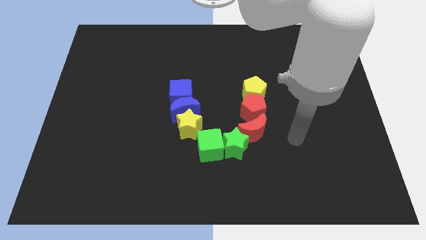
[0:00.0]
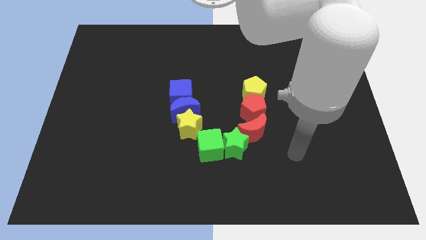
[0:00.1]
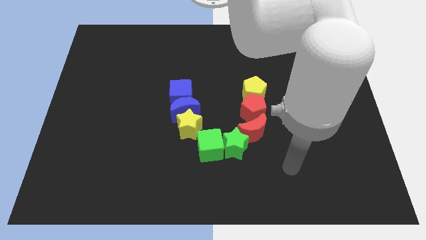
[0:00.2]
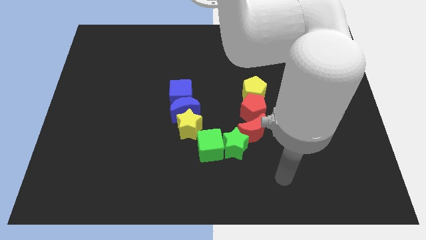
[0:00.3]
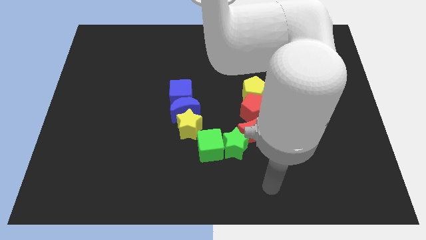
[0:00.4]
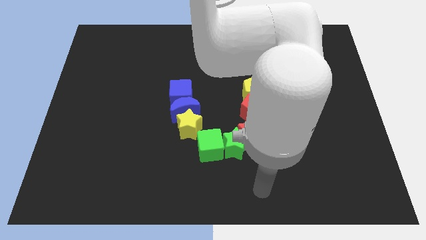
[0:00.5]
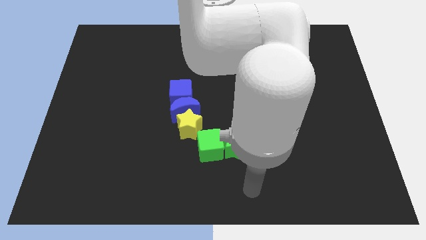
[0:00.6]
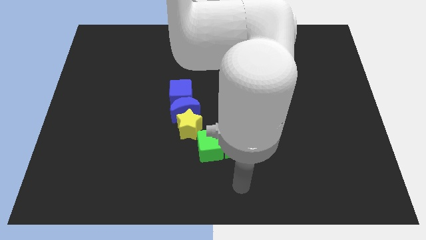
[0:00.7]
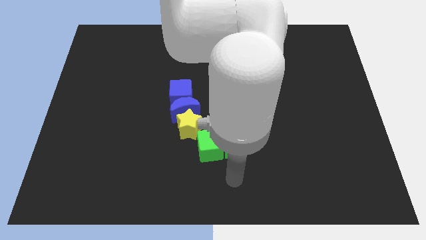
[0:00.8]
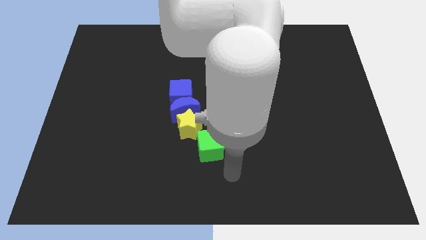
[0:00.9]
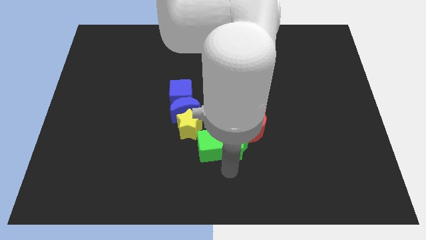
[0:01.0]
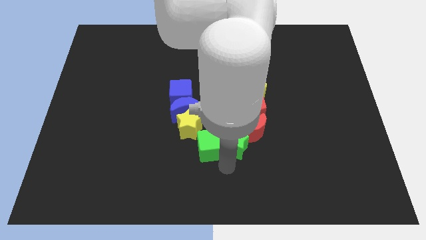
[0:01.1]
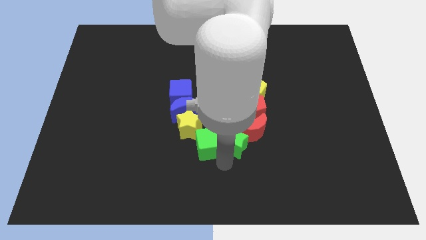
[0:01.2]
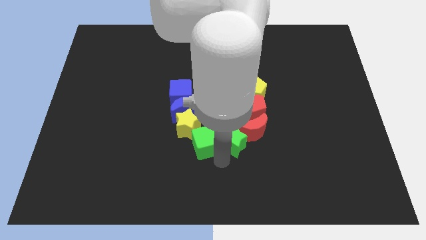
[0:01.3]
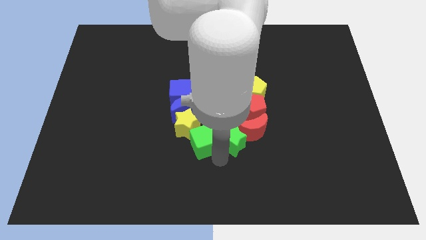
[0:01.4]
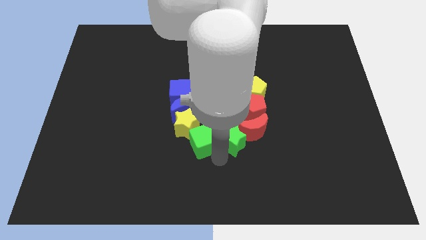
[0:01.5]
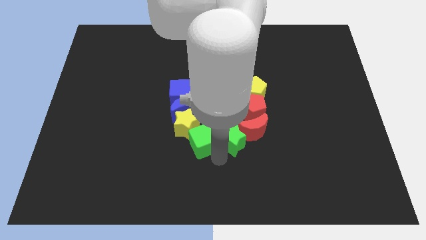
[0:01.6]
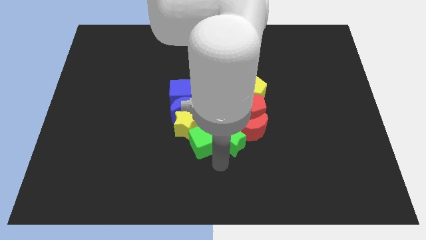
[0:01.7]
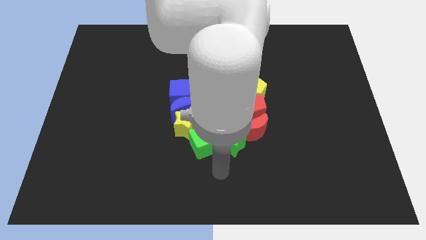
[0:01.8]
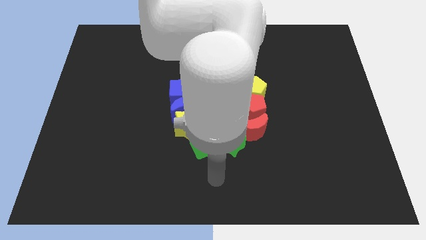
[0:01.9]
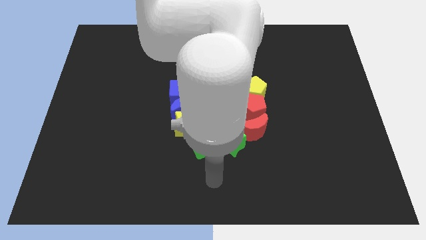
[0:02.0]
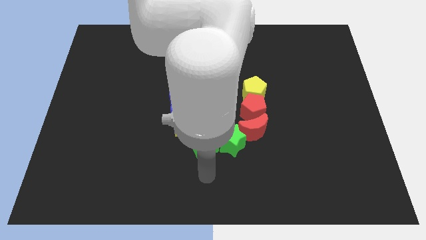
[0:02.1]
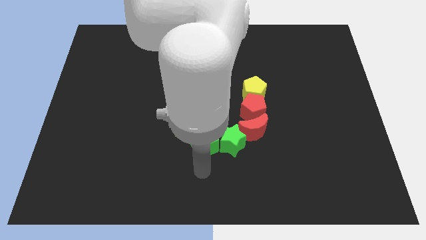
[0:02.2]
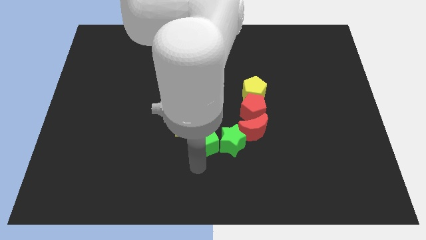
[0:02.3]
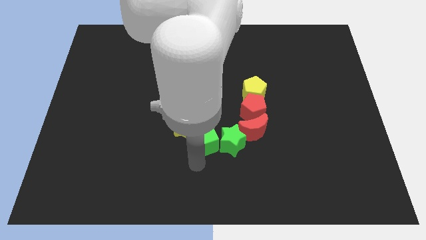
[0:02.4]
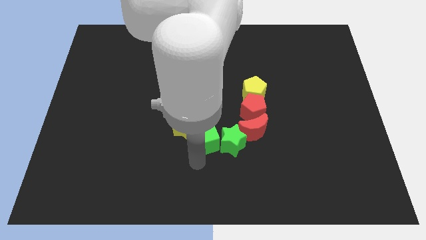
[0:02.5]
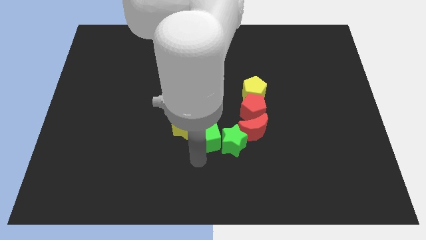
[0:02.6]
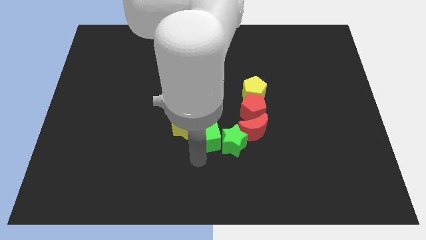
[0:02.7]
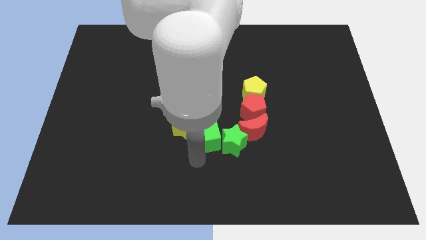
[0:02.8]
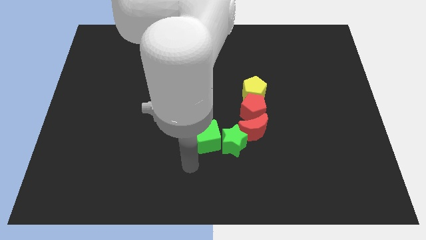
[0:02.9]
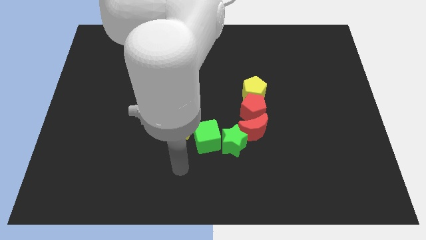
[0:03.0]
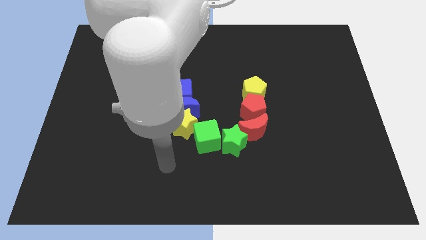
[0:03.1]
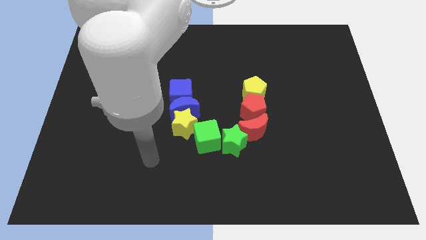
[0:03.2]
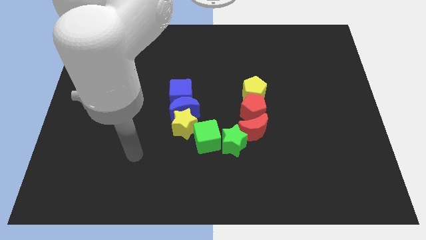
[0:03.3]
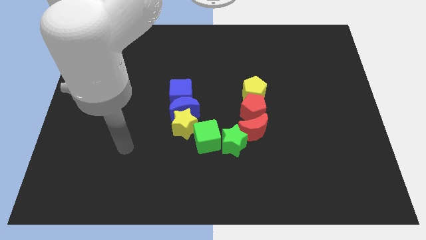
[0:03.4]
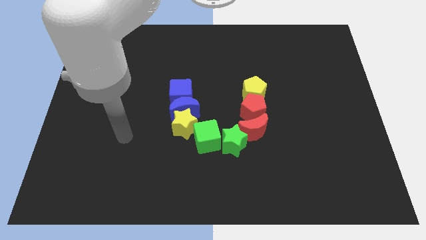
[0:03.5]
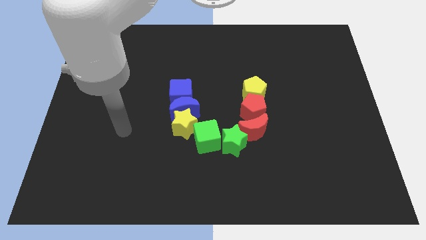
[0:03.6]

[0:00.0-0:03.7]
adjust the green star and green cube to the center of the board

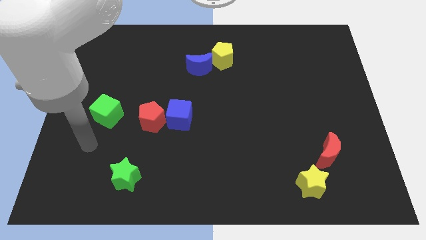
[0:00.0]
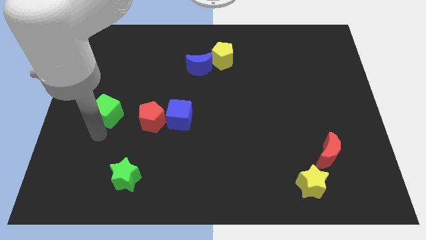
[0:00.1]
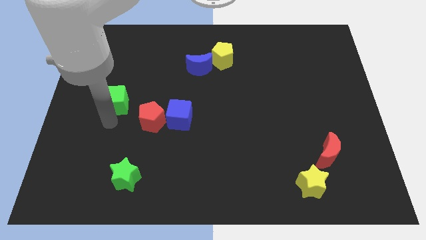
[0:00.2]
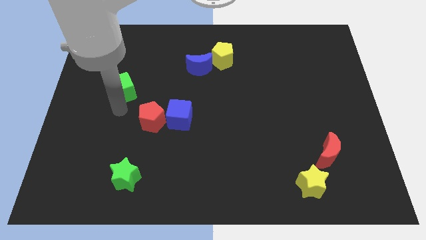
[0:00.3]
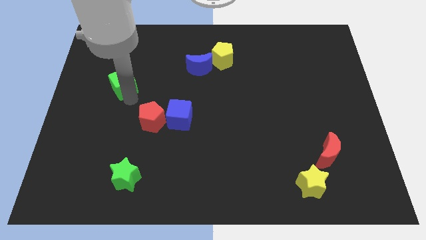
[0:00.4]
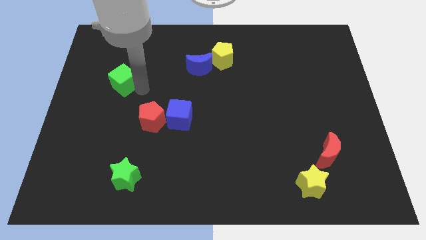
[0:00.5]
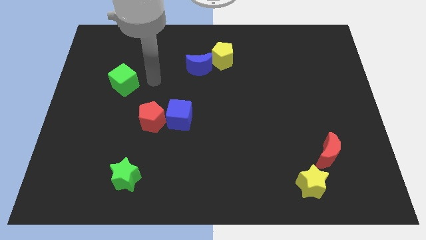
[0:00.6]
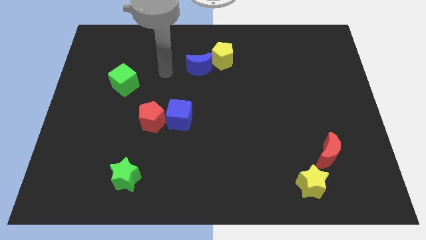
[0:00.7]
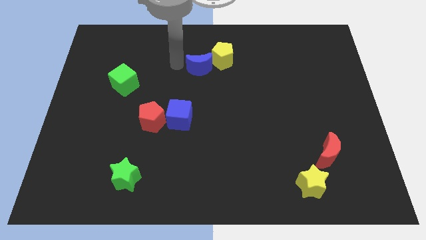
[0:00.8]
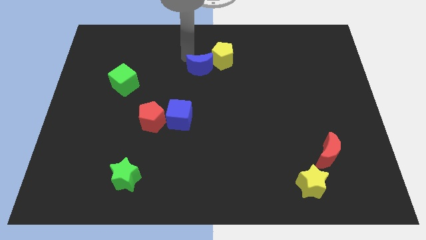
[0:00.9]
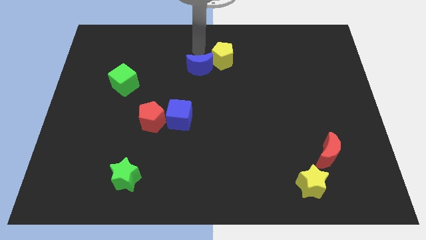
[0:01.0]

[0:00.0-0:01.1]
push the green cube slightly towards the top left corner

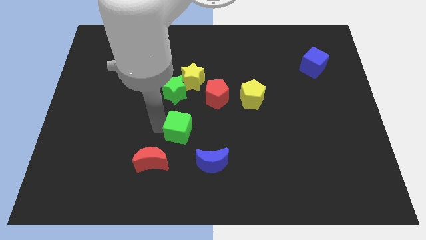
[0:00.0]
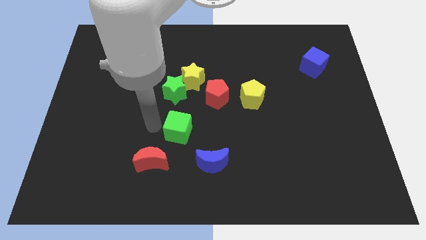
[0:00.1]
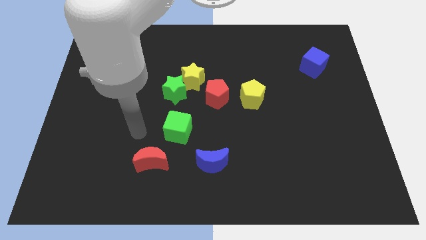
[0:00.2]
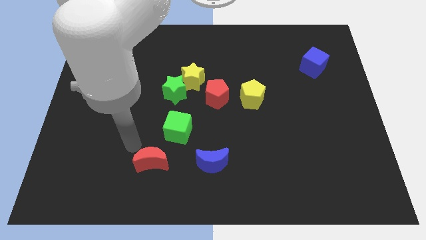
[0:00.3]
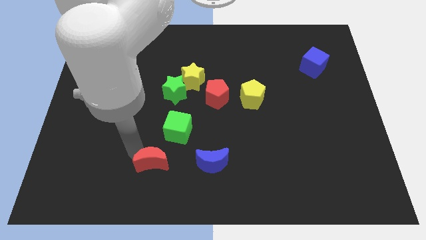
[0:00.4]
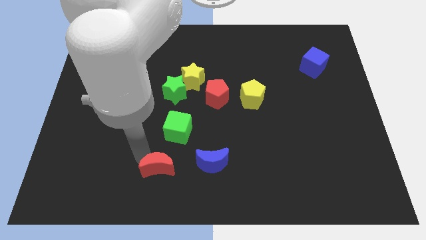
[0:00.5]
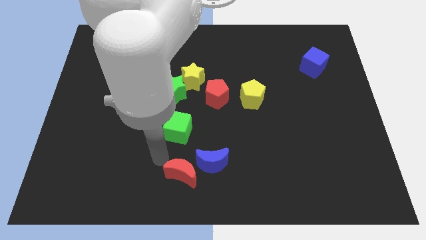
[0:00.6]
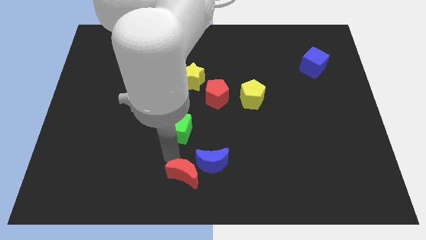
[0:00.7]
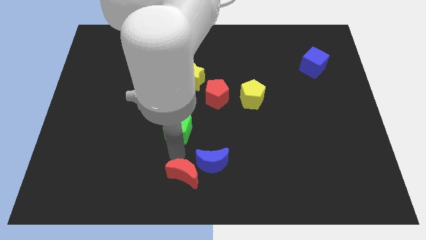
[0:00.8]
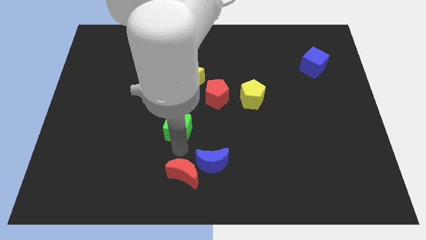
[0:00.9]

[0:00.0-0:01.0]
move the red crescent close to the blue crescent

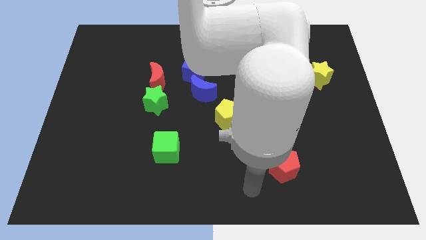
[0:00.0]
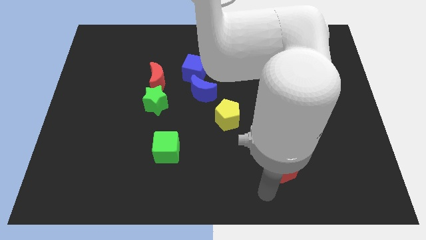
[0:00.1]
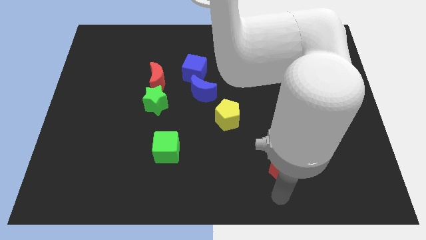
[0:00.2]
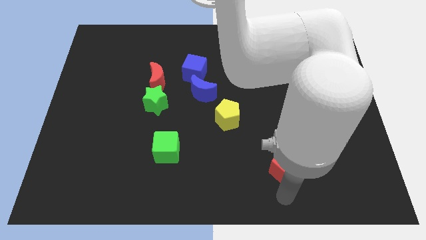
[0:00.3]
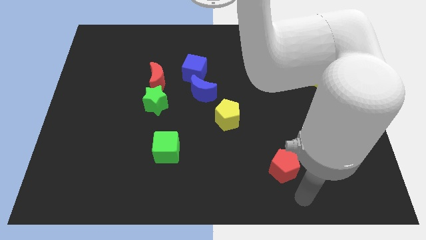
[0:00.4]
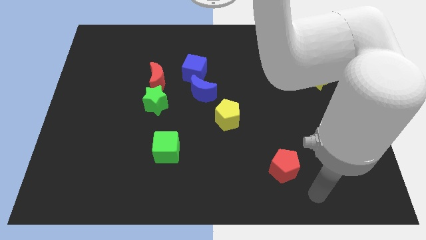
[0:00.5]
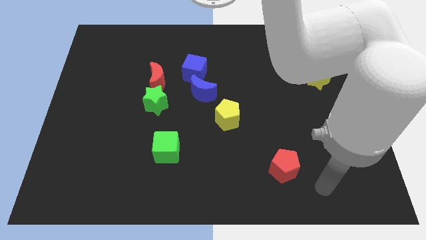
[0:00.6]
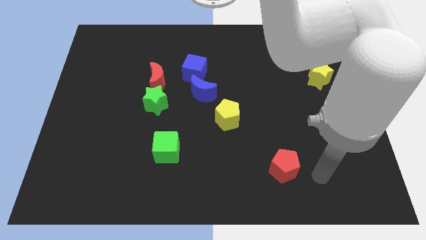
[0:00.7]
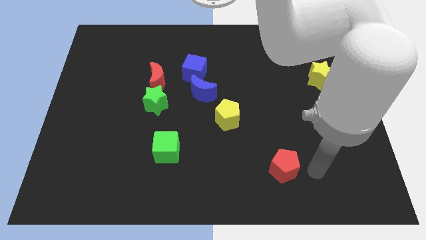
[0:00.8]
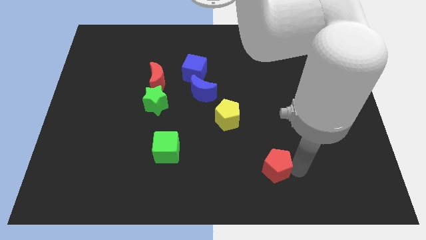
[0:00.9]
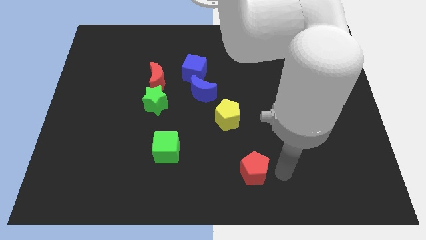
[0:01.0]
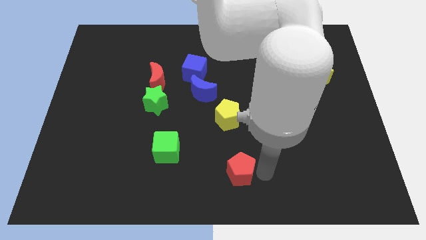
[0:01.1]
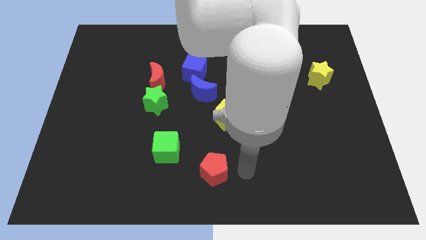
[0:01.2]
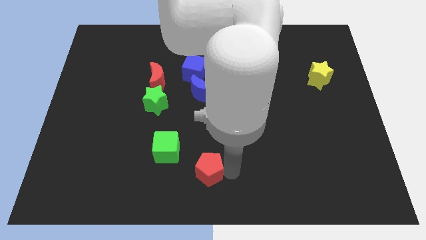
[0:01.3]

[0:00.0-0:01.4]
push the red pentagon to the left

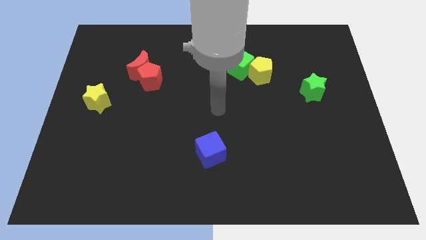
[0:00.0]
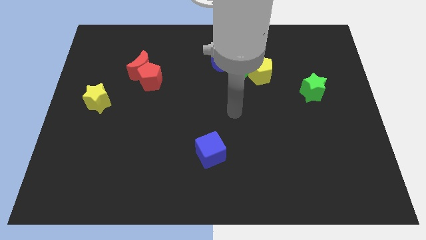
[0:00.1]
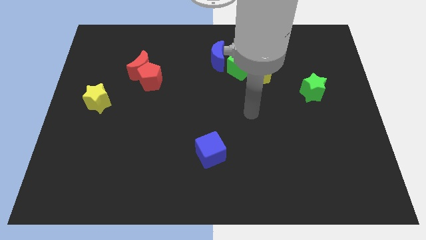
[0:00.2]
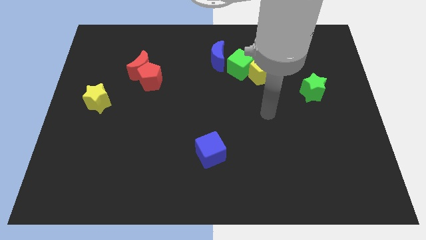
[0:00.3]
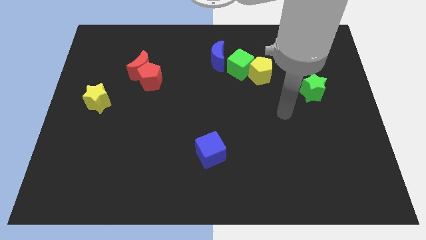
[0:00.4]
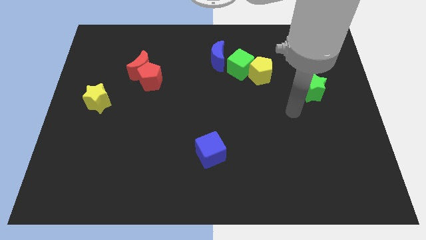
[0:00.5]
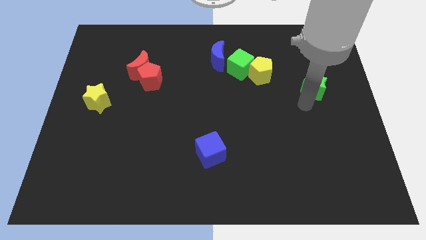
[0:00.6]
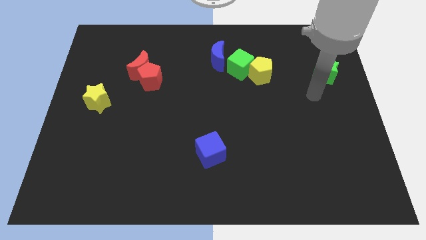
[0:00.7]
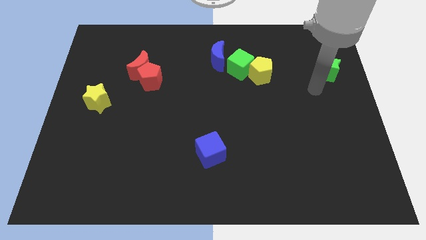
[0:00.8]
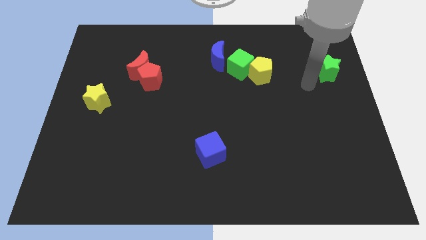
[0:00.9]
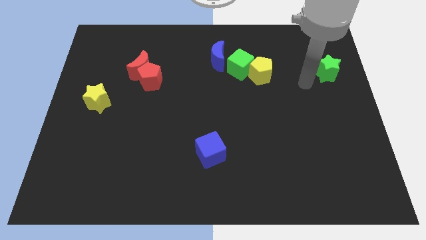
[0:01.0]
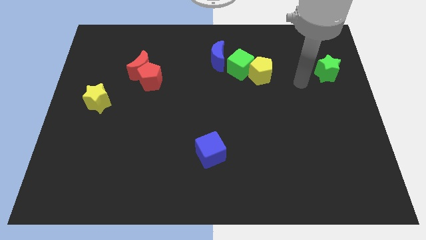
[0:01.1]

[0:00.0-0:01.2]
slightly push the green star upward

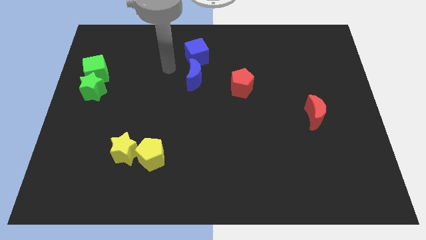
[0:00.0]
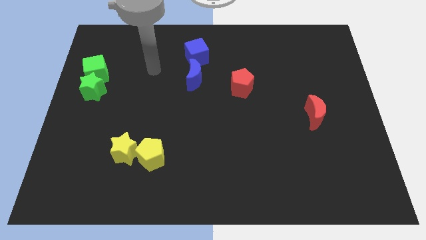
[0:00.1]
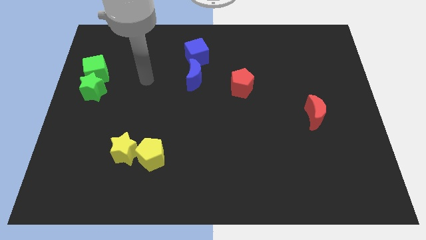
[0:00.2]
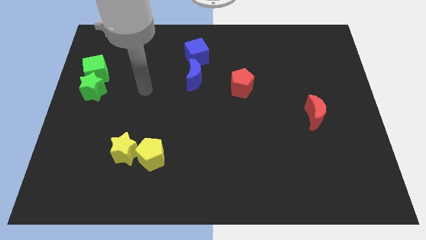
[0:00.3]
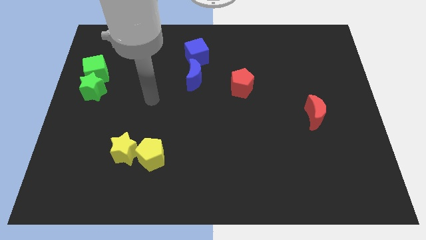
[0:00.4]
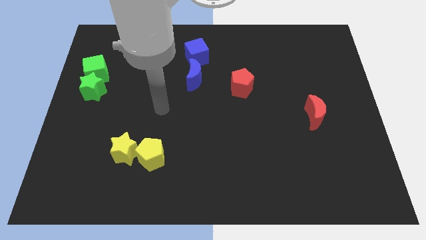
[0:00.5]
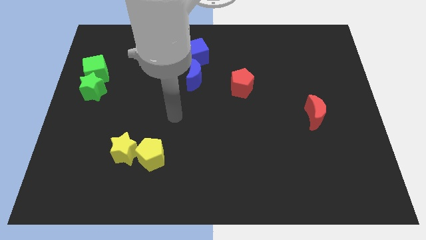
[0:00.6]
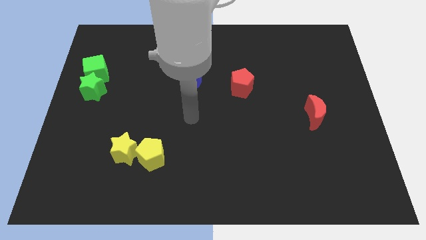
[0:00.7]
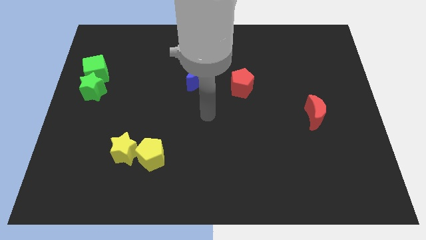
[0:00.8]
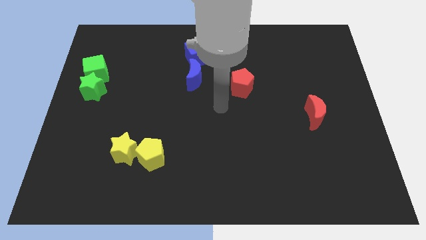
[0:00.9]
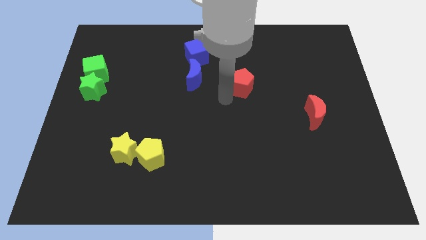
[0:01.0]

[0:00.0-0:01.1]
go to the bottom side of the red pentagon
